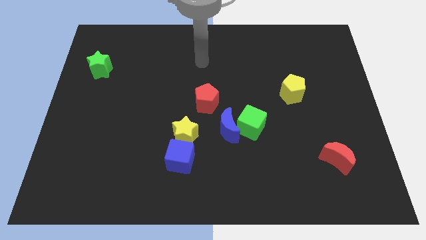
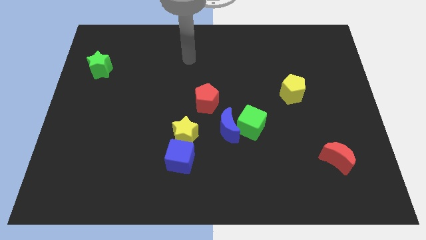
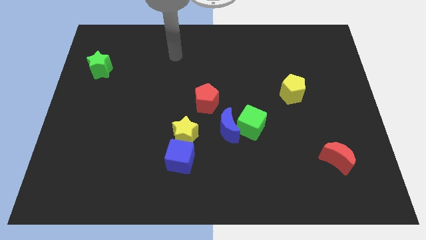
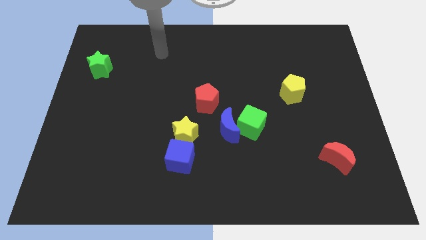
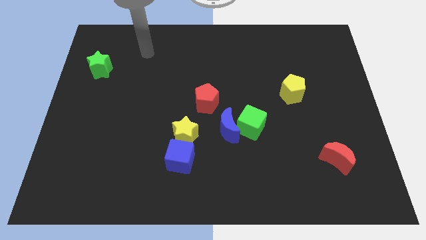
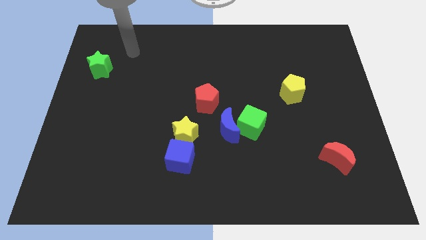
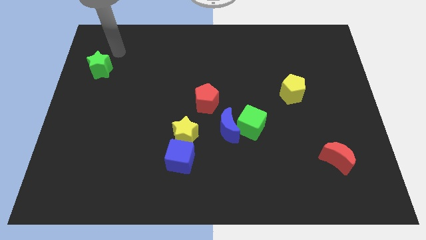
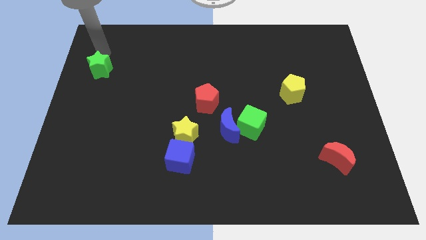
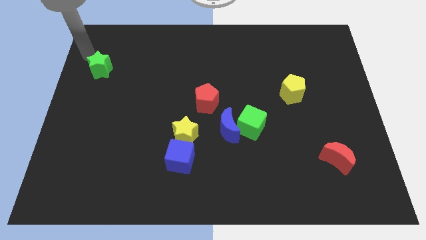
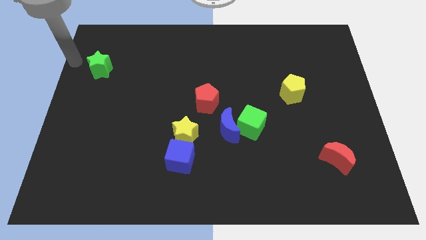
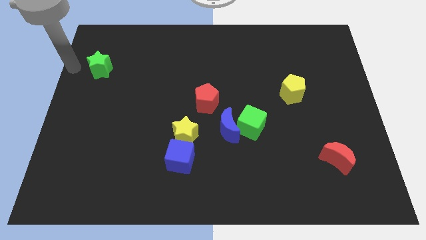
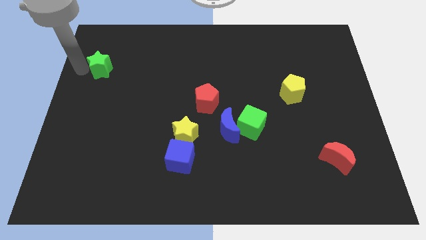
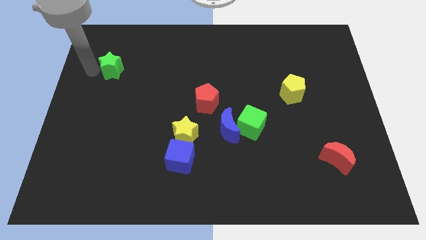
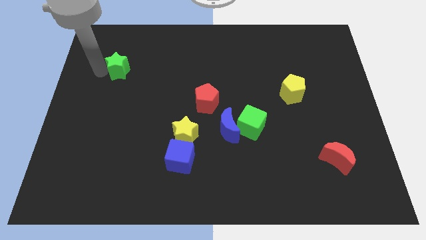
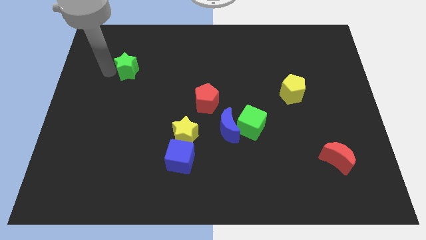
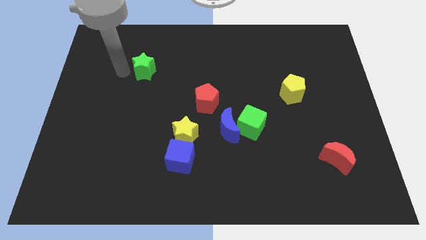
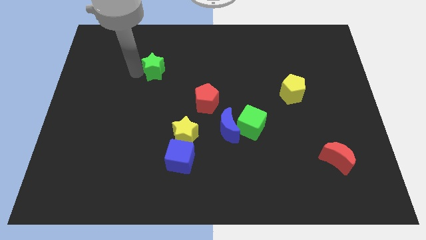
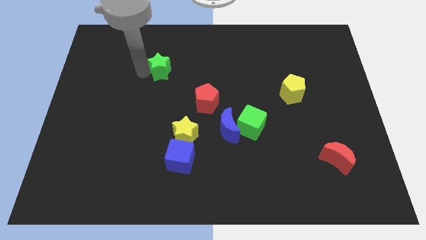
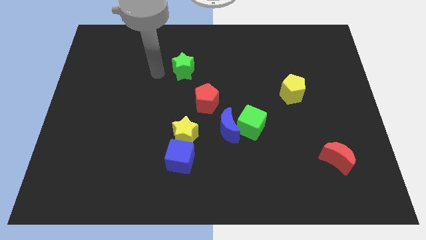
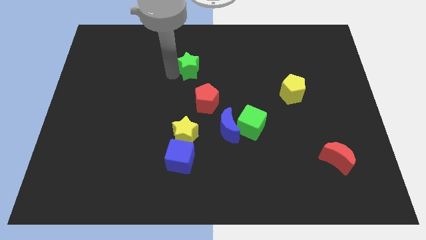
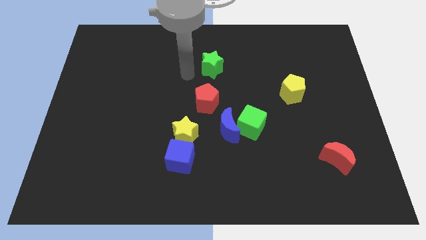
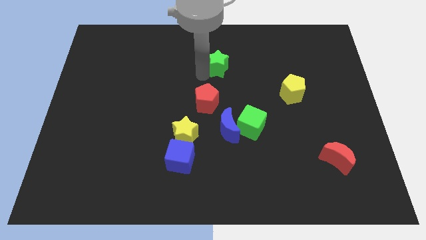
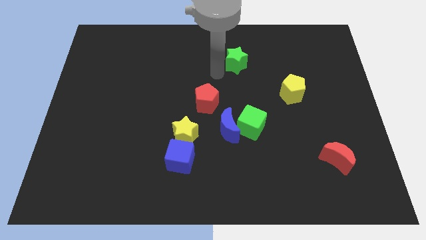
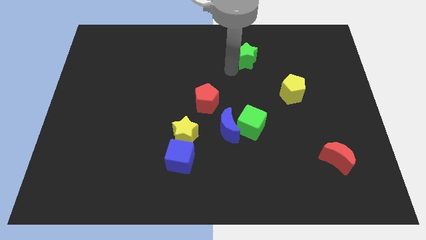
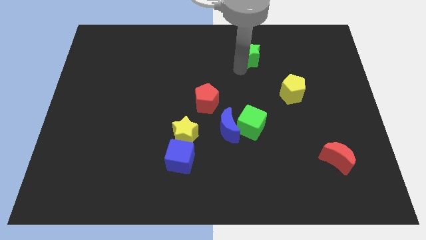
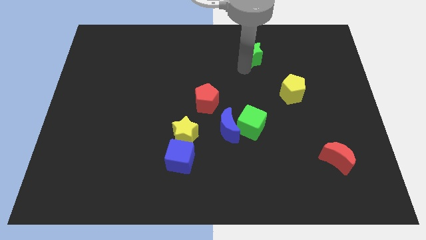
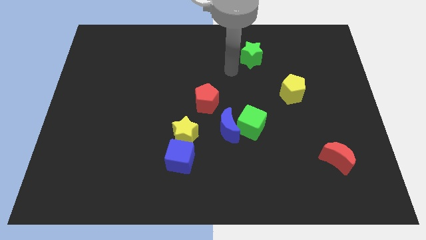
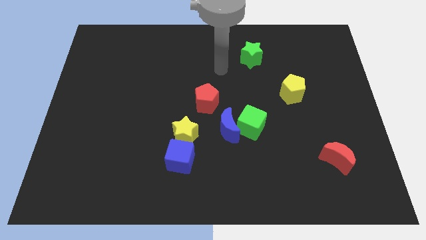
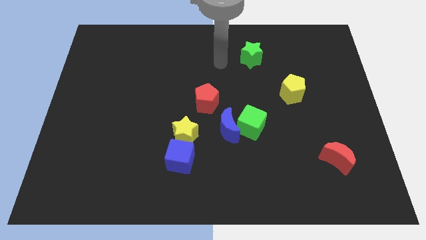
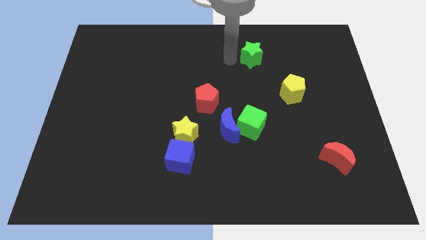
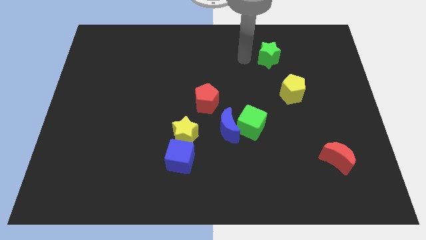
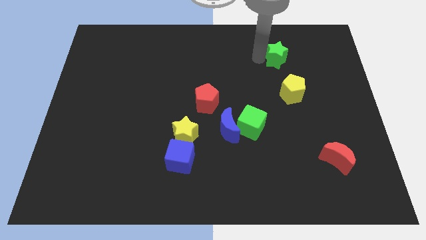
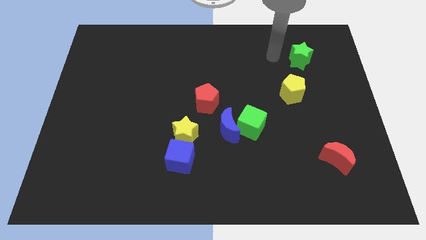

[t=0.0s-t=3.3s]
place the green star above the yellow pentagon

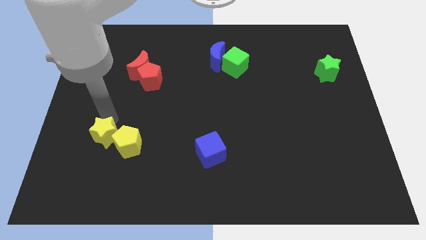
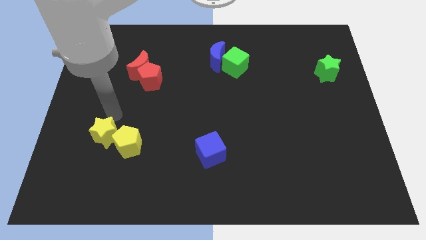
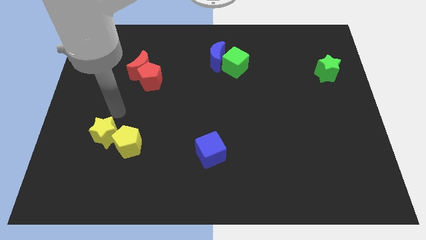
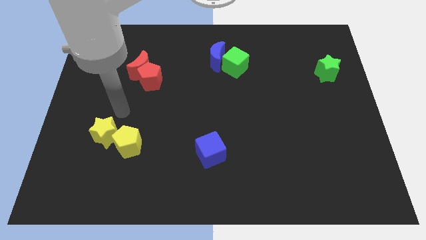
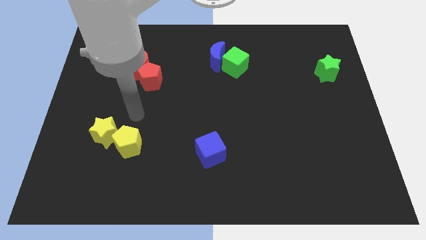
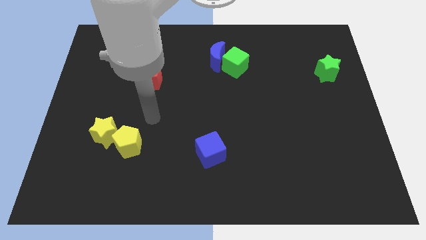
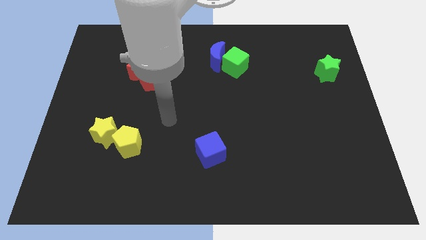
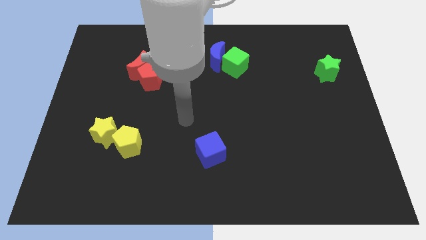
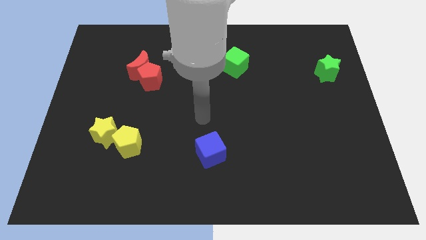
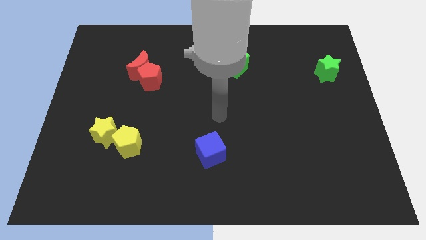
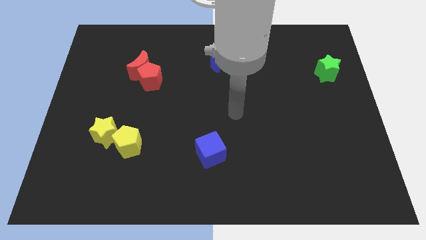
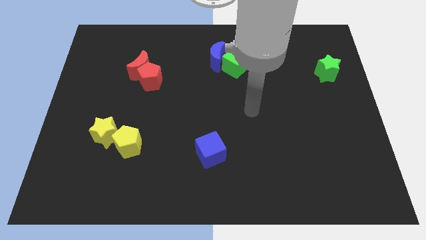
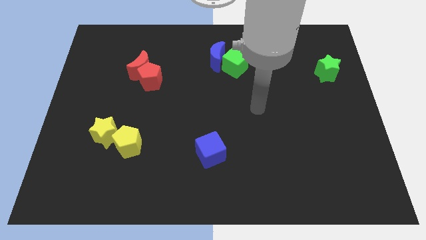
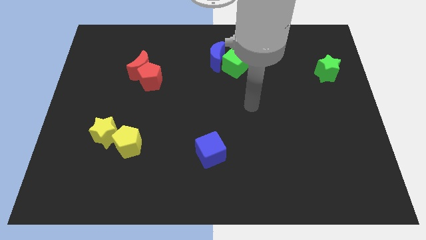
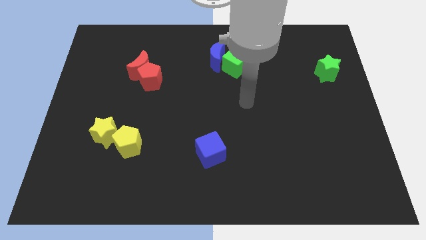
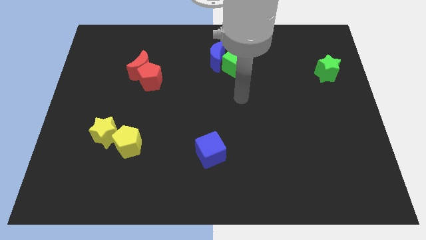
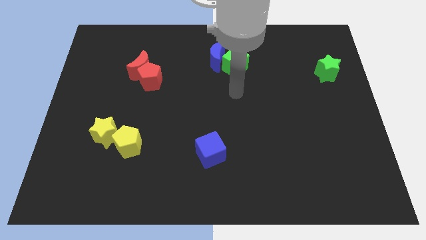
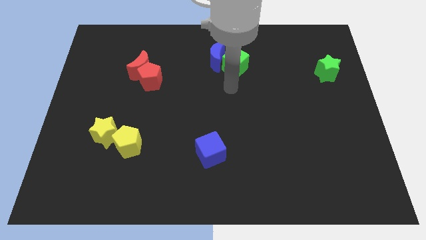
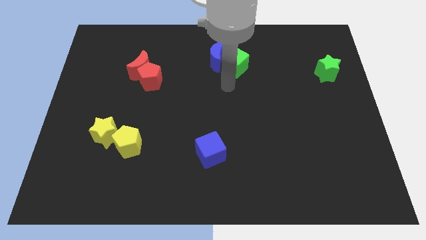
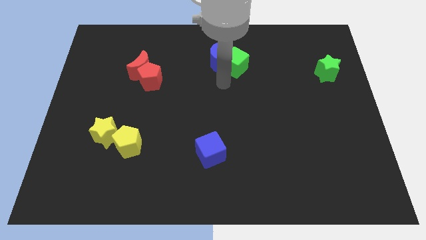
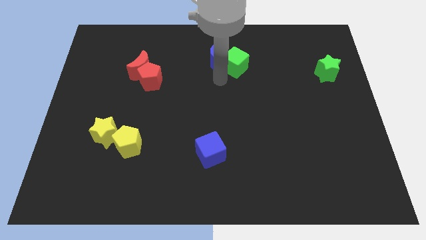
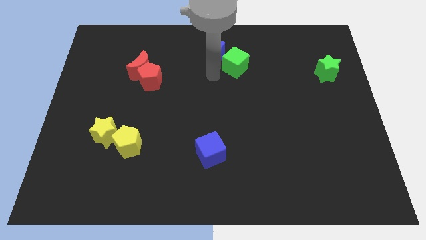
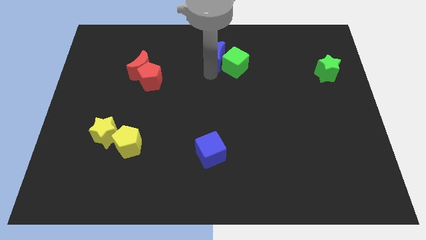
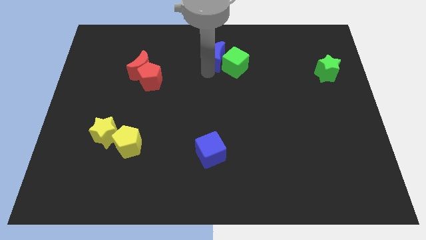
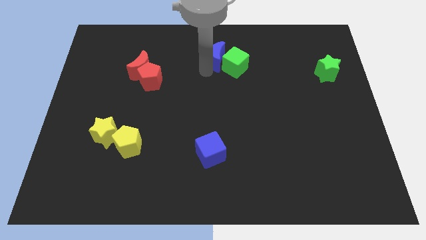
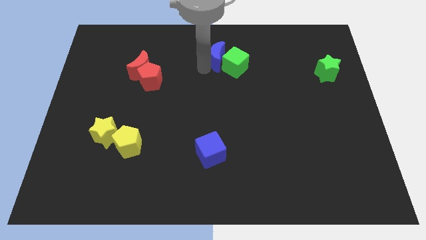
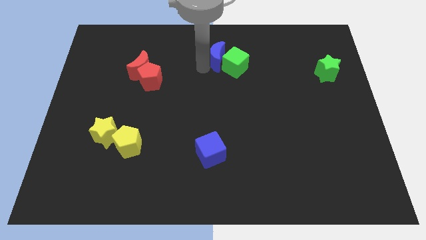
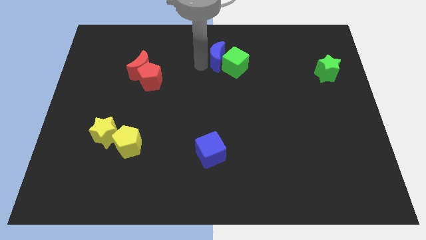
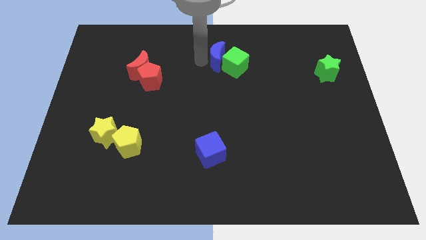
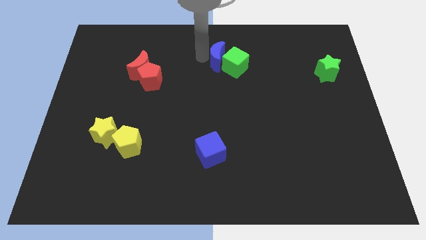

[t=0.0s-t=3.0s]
move your hand close to the left side of the blue moon

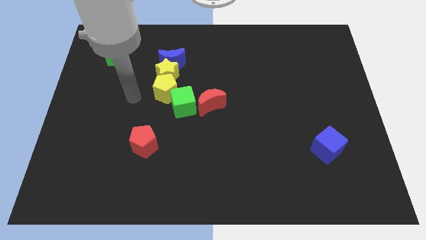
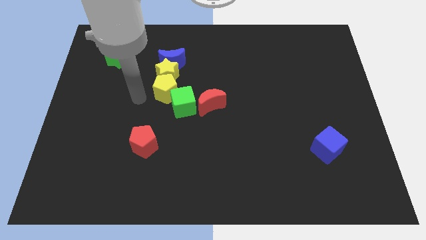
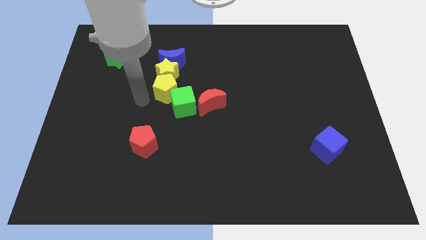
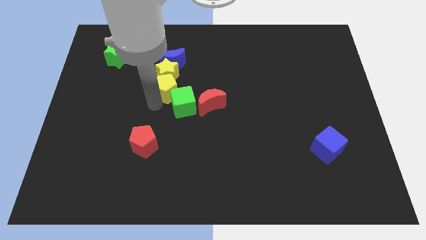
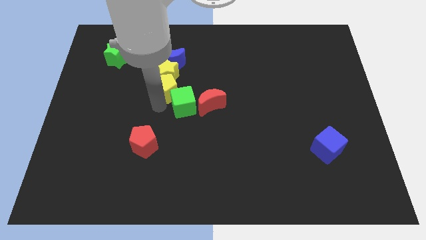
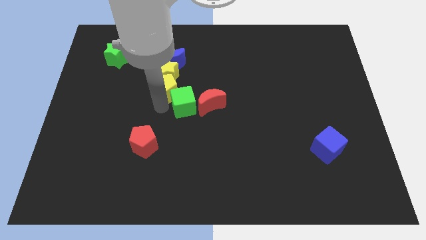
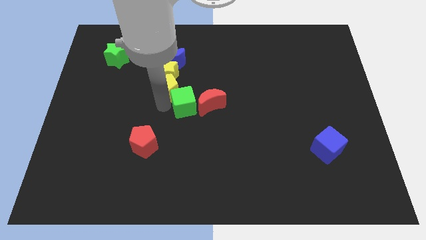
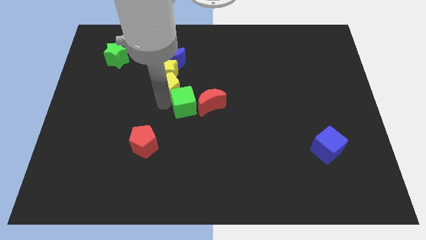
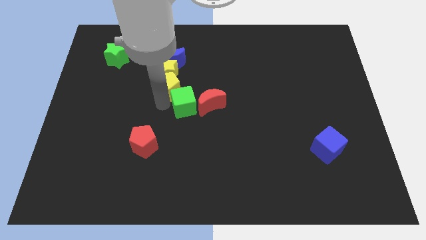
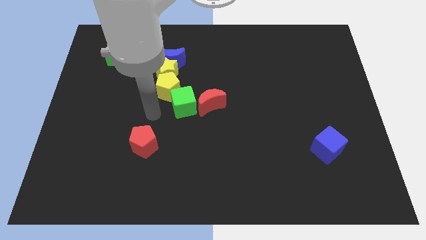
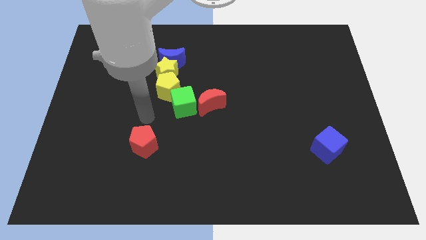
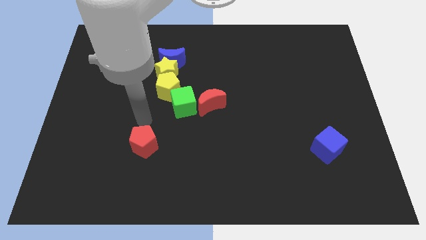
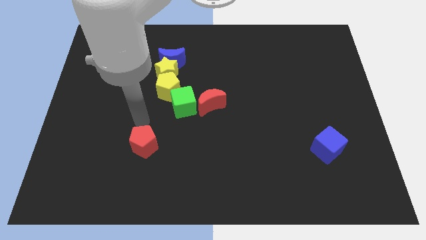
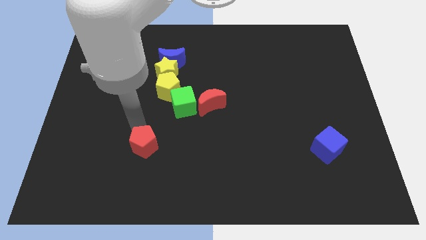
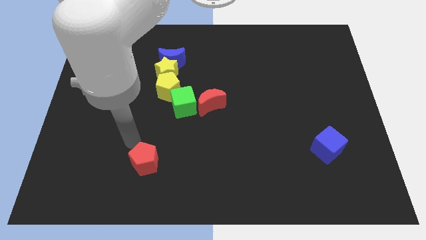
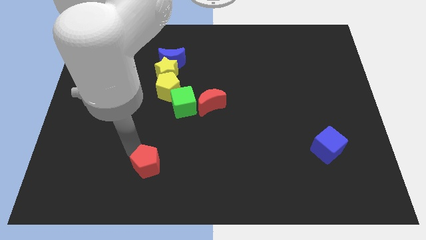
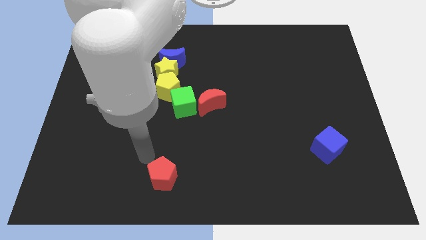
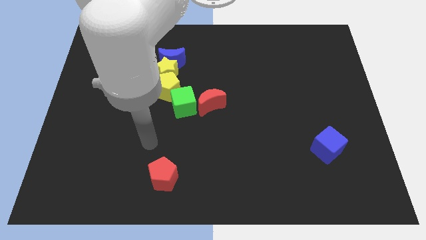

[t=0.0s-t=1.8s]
push the red pentagon towards the bottom center of the board

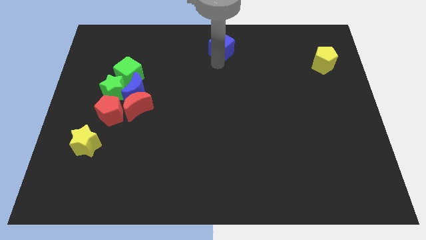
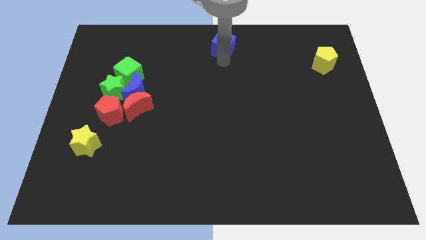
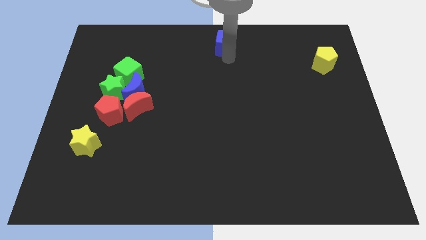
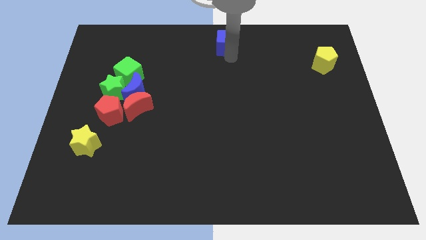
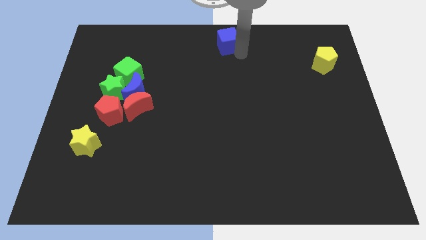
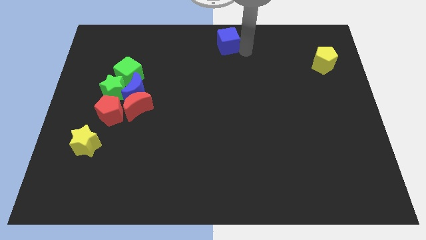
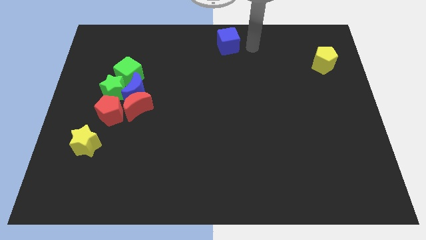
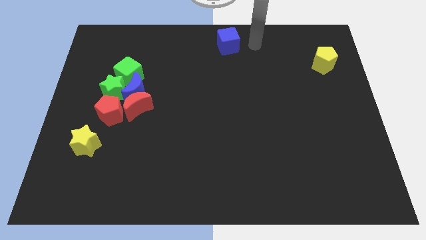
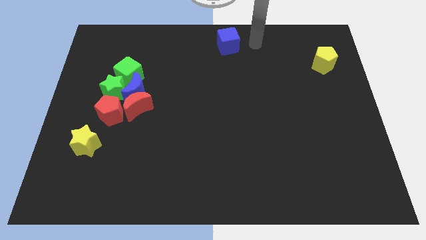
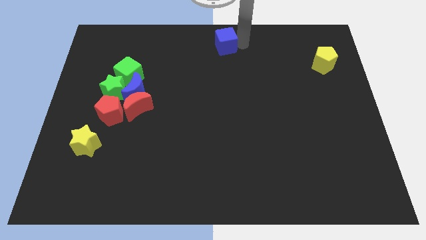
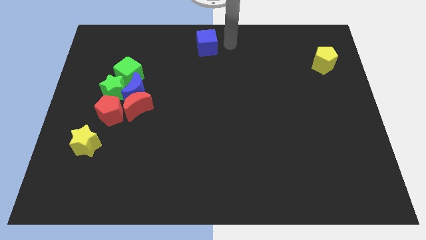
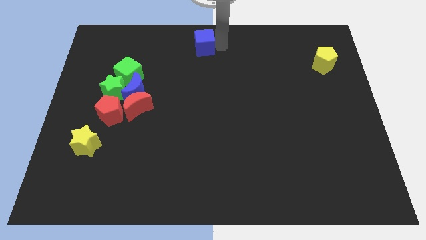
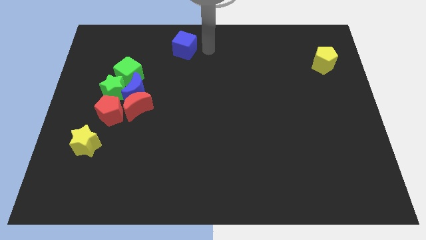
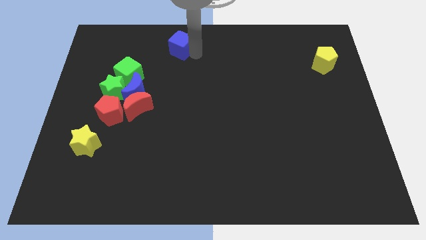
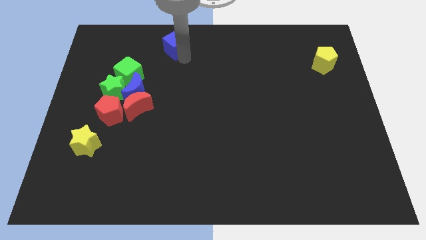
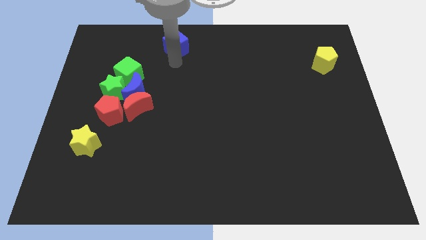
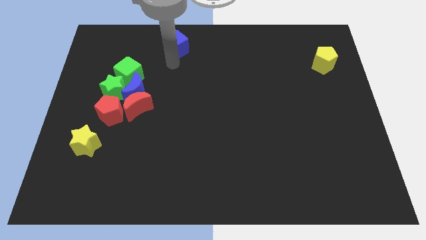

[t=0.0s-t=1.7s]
slide the blue cube towards the top left
